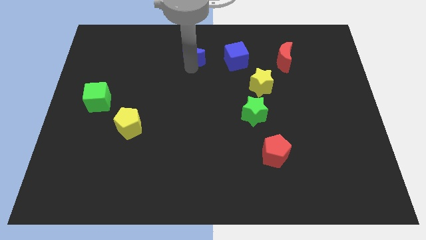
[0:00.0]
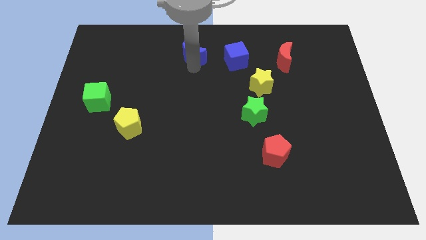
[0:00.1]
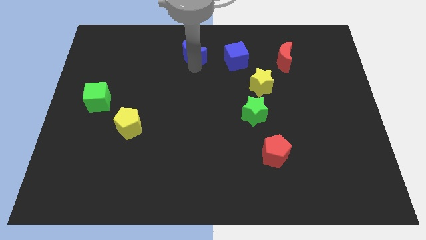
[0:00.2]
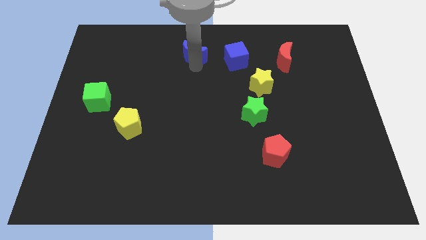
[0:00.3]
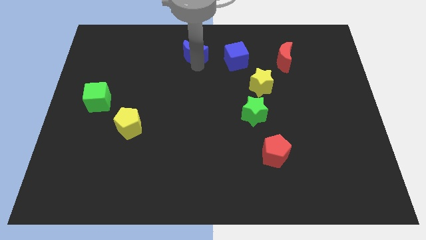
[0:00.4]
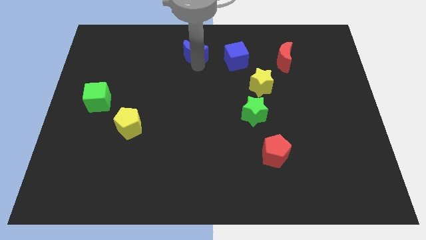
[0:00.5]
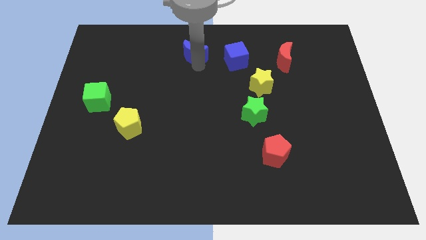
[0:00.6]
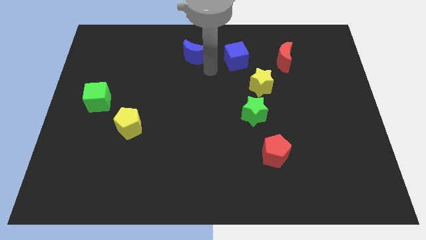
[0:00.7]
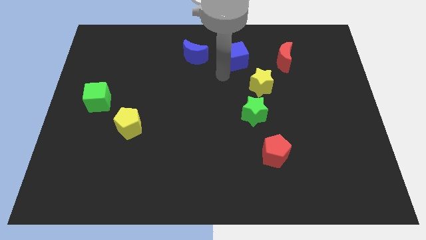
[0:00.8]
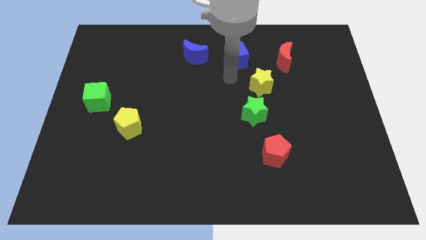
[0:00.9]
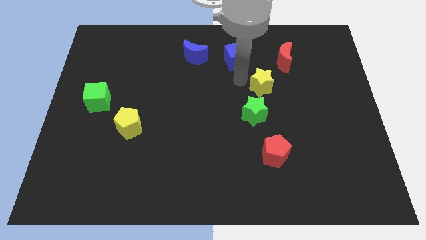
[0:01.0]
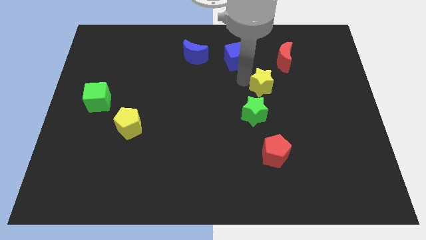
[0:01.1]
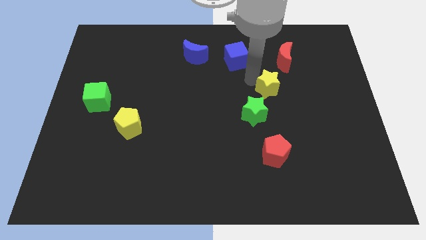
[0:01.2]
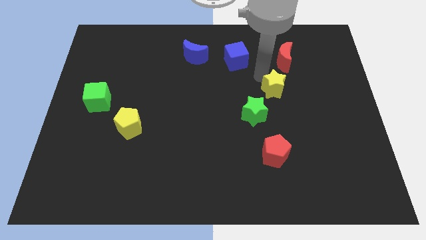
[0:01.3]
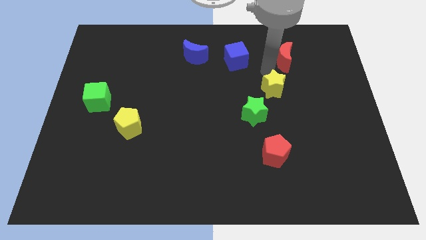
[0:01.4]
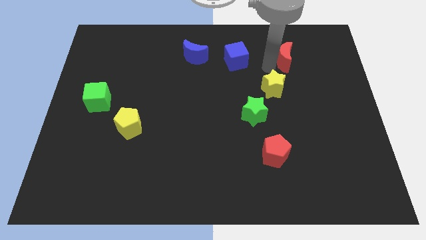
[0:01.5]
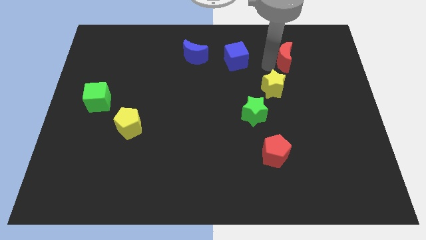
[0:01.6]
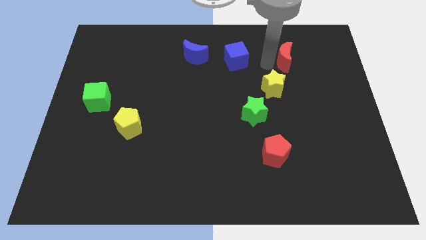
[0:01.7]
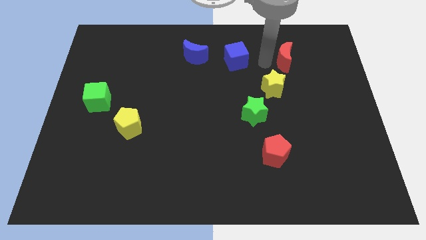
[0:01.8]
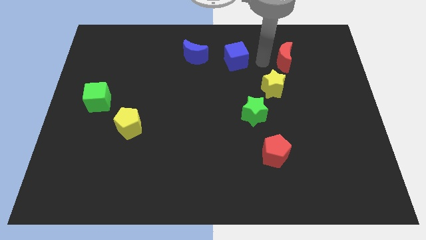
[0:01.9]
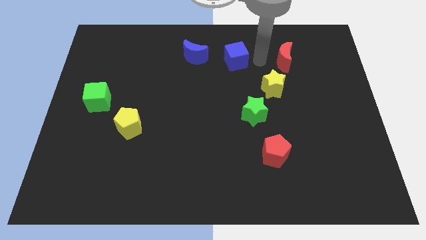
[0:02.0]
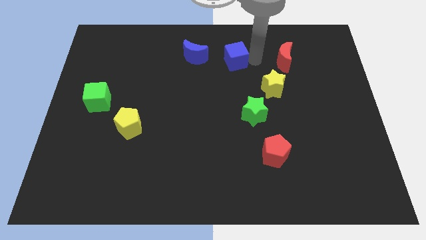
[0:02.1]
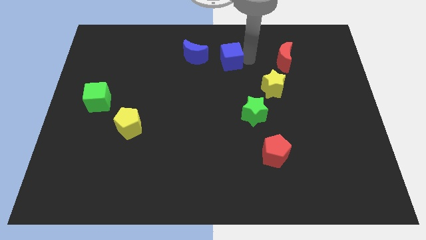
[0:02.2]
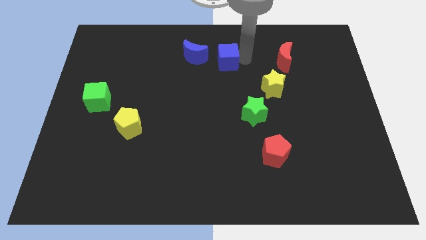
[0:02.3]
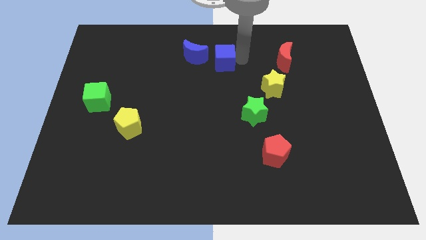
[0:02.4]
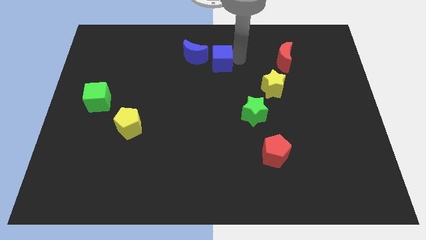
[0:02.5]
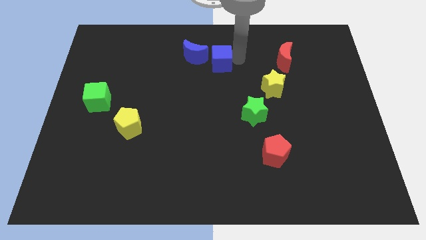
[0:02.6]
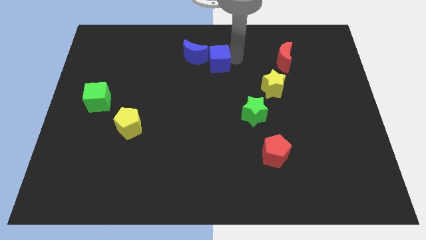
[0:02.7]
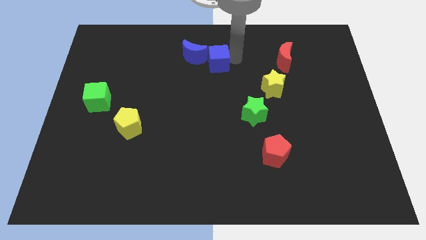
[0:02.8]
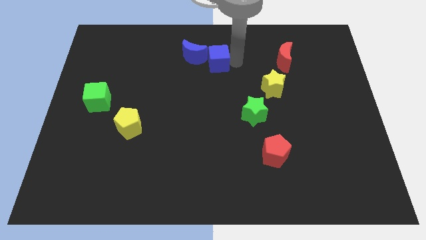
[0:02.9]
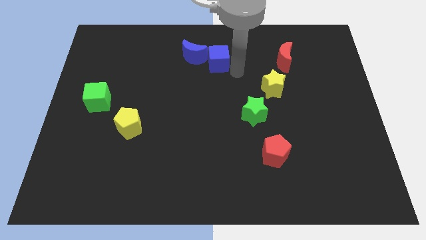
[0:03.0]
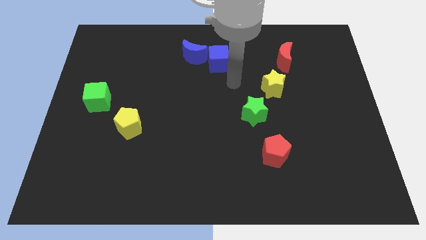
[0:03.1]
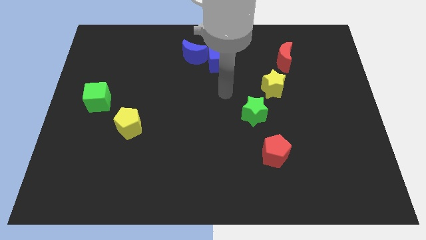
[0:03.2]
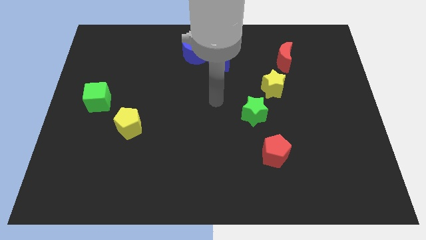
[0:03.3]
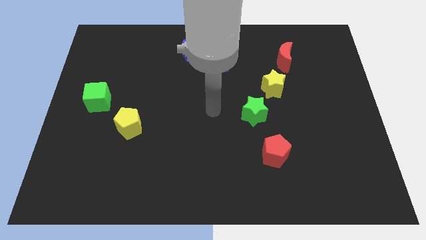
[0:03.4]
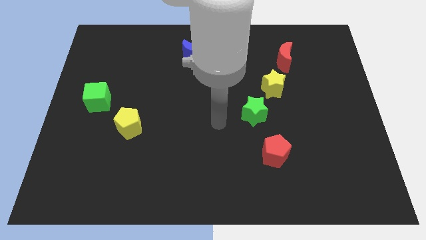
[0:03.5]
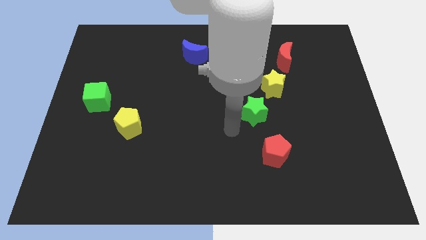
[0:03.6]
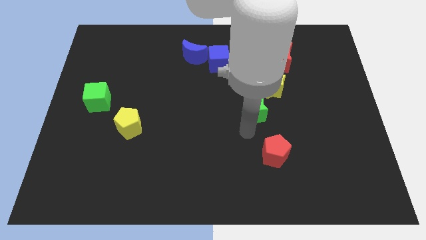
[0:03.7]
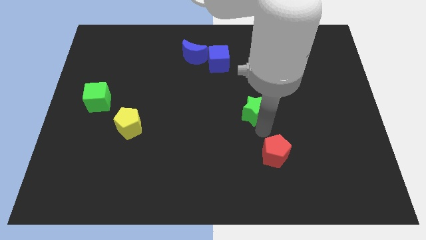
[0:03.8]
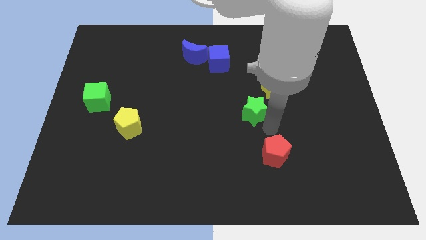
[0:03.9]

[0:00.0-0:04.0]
move your arm to the bottom of green star

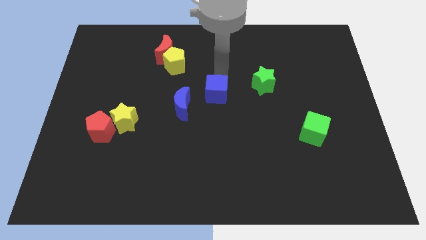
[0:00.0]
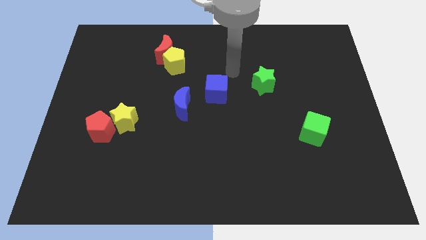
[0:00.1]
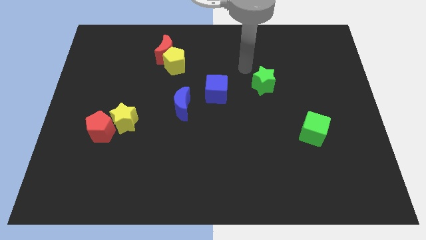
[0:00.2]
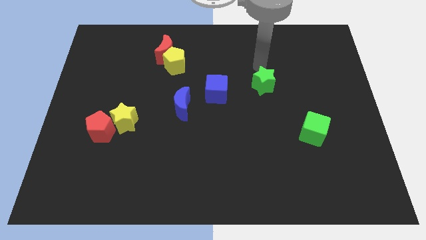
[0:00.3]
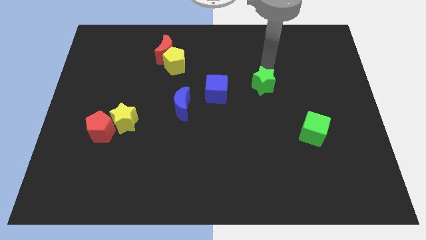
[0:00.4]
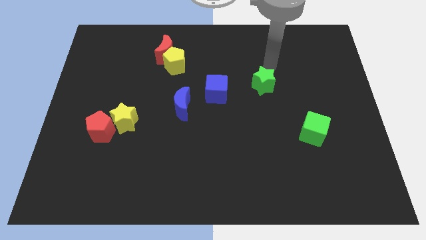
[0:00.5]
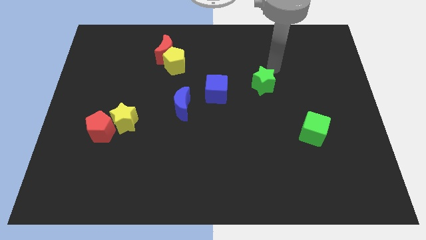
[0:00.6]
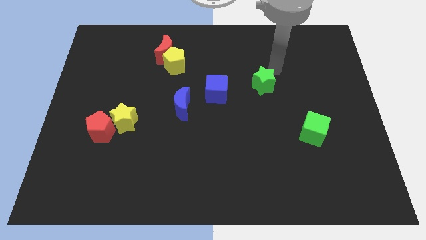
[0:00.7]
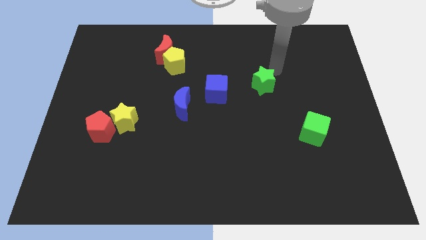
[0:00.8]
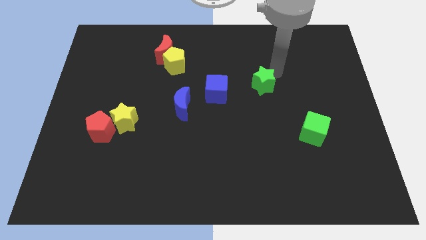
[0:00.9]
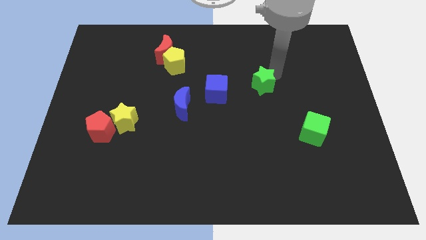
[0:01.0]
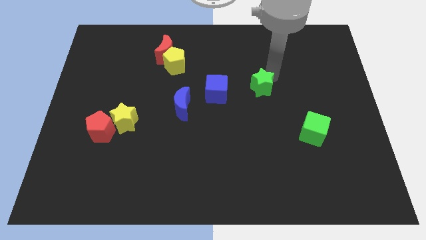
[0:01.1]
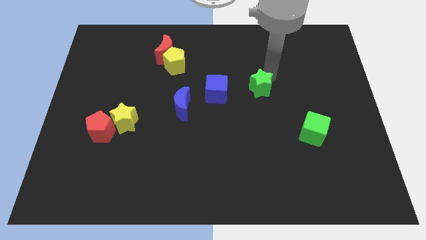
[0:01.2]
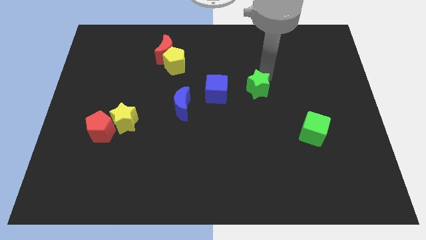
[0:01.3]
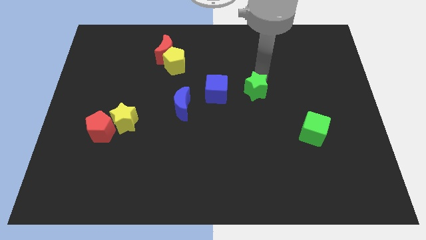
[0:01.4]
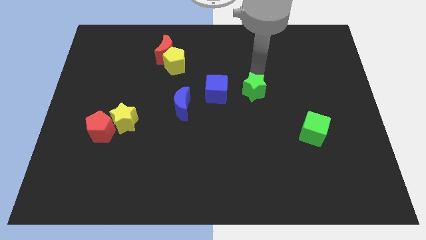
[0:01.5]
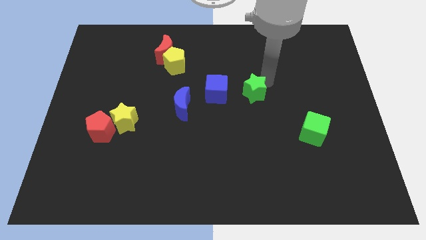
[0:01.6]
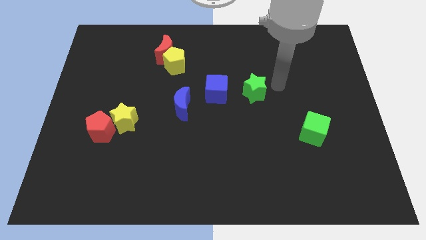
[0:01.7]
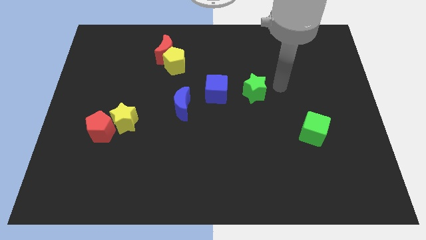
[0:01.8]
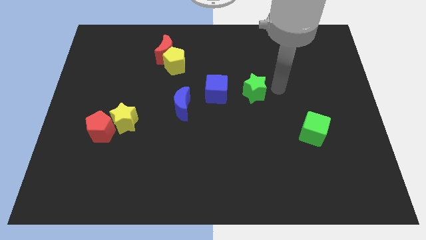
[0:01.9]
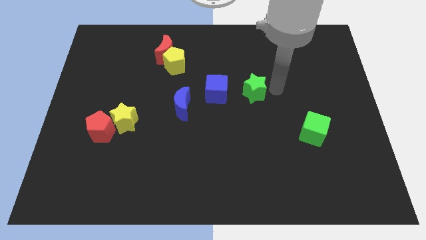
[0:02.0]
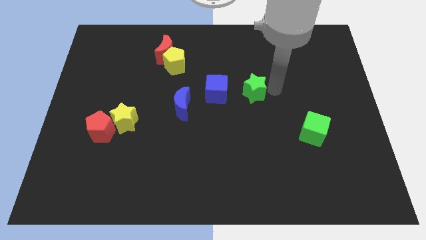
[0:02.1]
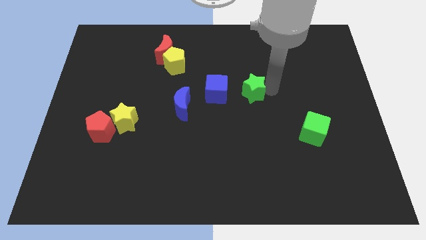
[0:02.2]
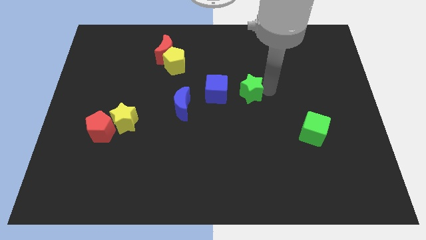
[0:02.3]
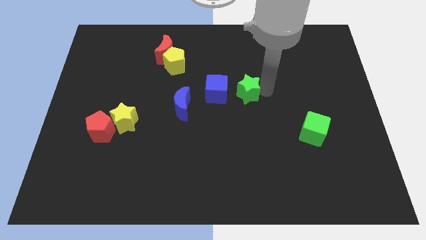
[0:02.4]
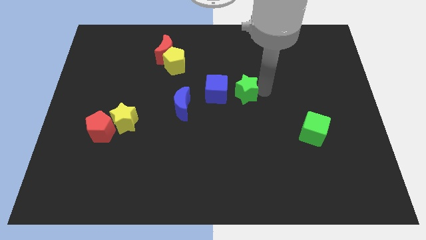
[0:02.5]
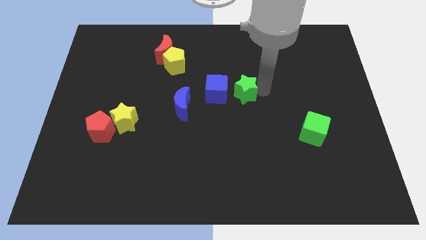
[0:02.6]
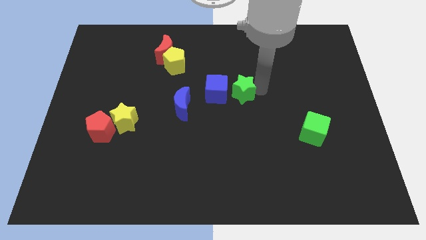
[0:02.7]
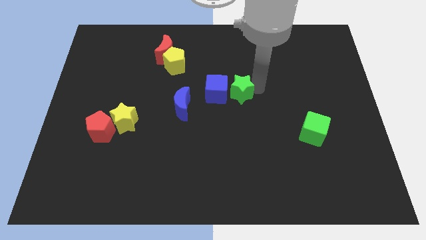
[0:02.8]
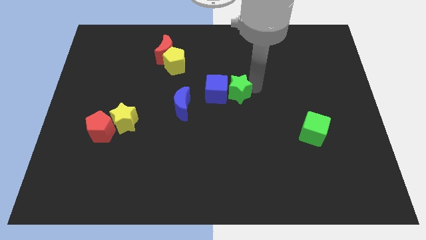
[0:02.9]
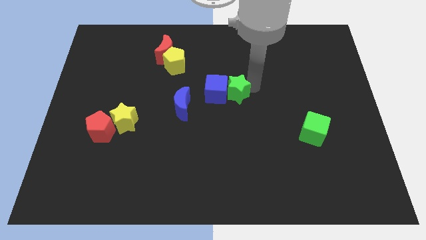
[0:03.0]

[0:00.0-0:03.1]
push green star into blue cube

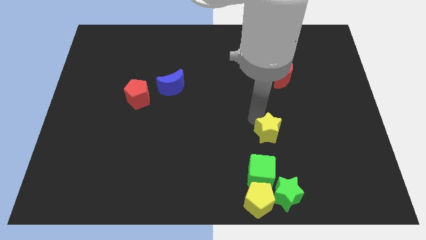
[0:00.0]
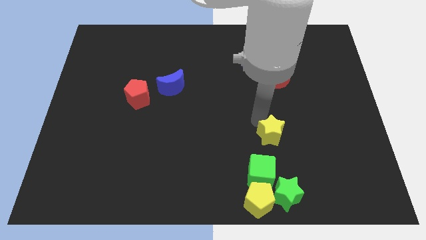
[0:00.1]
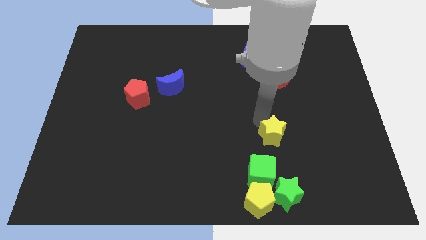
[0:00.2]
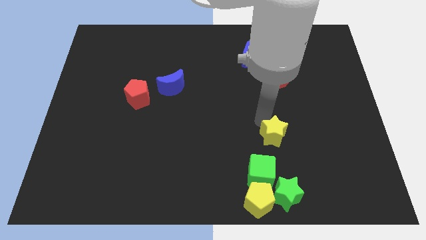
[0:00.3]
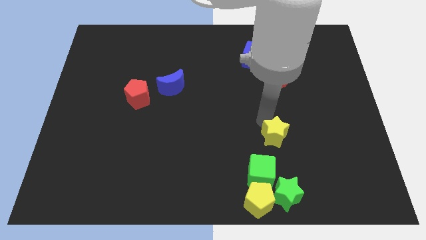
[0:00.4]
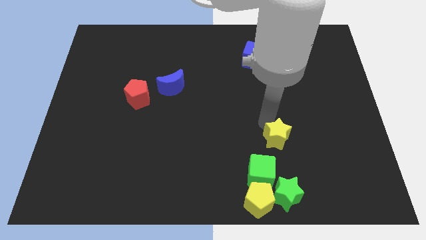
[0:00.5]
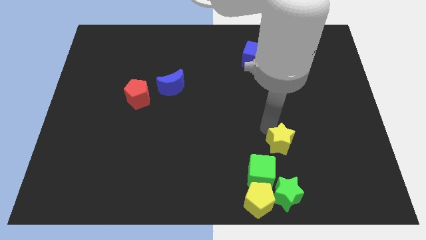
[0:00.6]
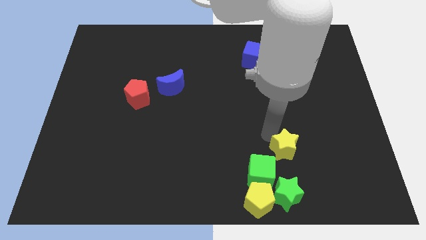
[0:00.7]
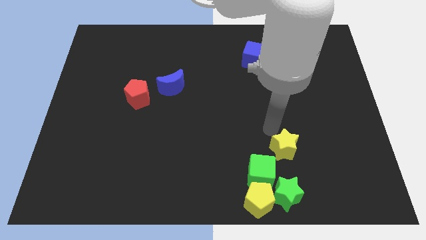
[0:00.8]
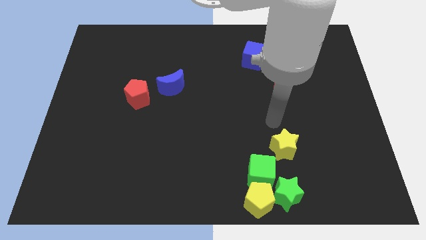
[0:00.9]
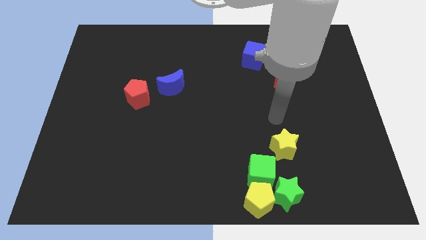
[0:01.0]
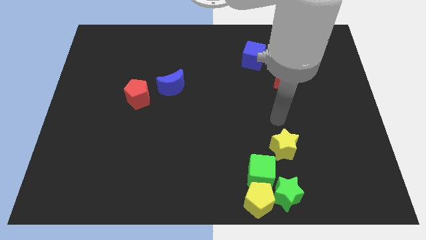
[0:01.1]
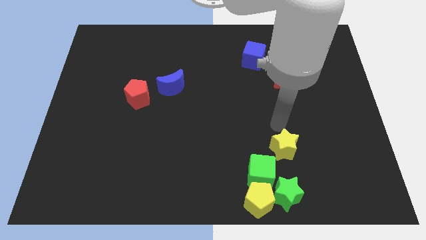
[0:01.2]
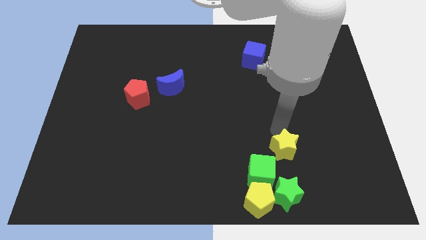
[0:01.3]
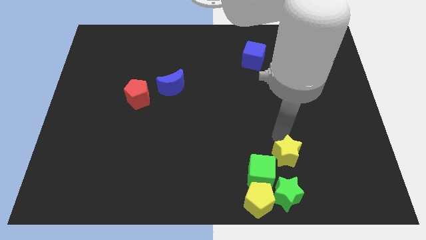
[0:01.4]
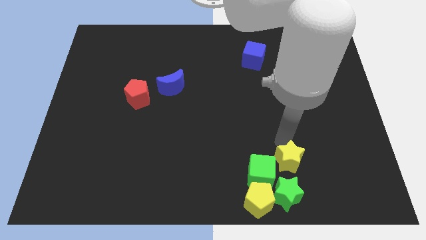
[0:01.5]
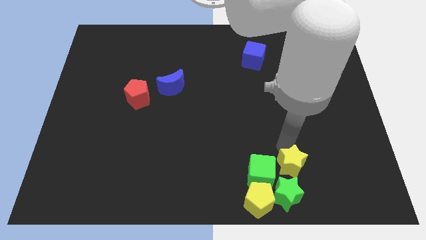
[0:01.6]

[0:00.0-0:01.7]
place the yellow star above the green star
